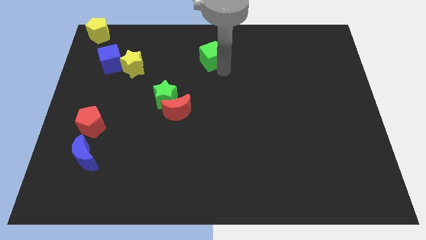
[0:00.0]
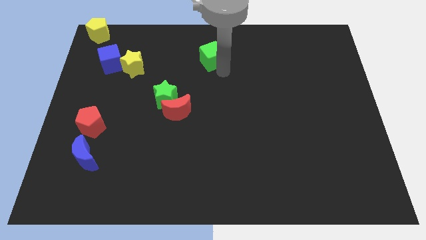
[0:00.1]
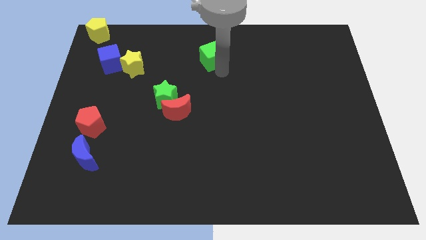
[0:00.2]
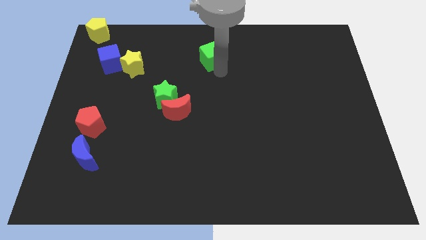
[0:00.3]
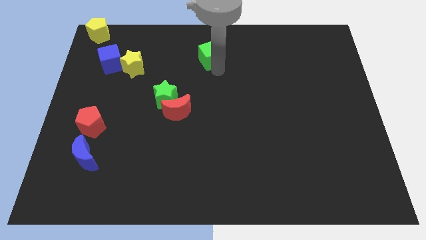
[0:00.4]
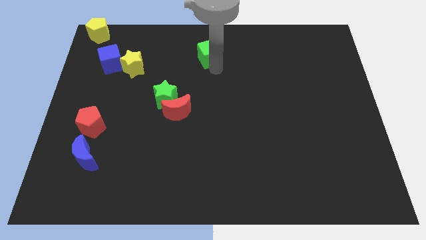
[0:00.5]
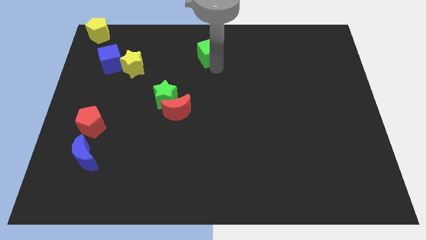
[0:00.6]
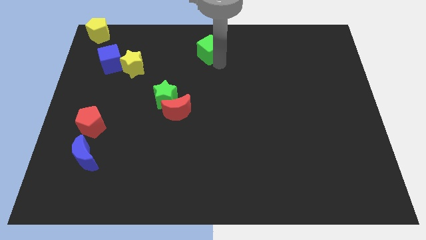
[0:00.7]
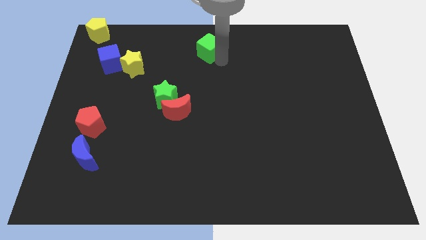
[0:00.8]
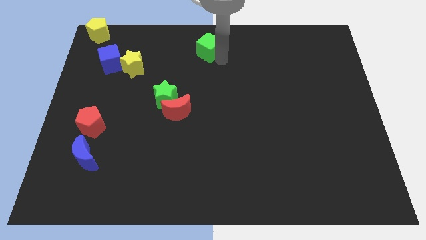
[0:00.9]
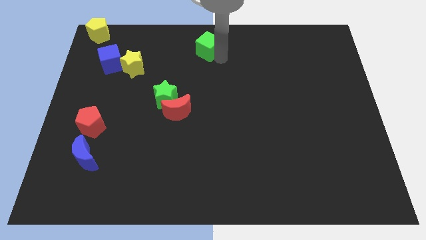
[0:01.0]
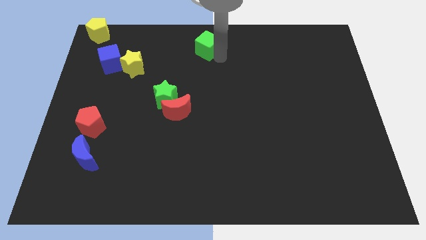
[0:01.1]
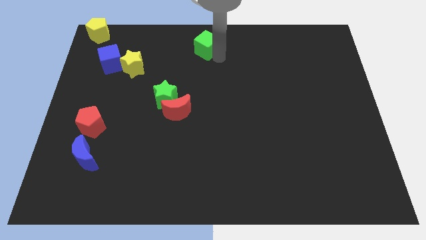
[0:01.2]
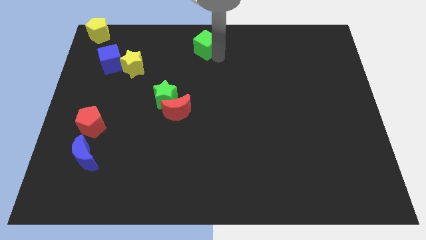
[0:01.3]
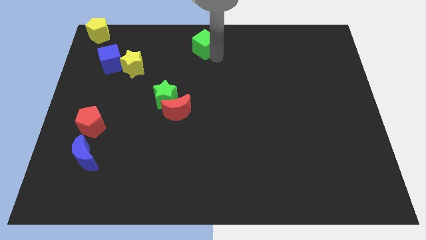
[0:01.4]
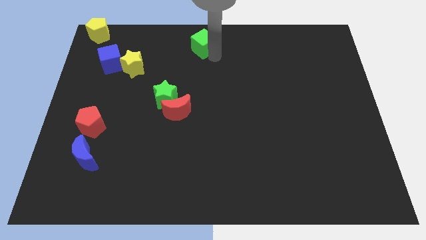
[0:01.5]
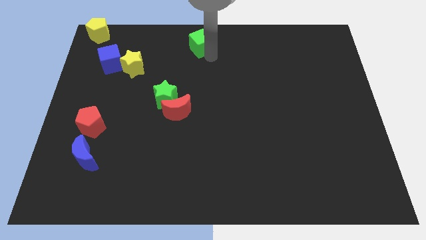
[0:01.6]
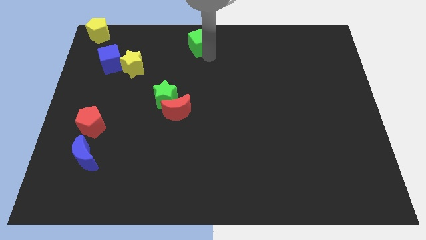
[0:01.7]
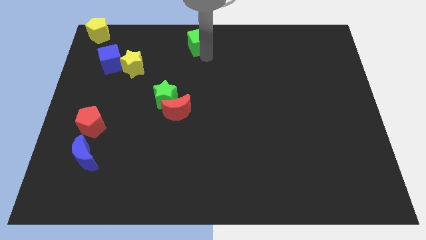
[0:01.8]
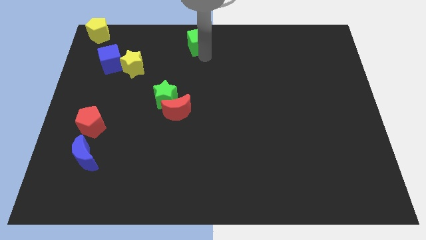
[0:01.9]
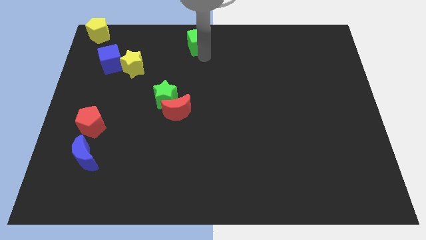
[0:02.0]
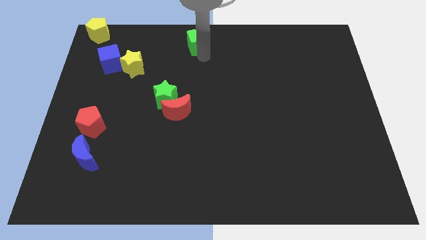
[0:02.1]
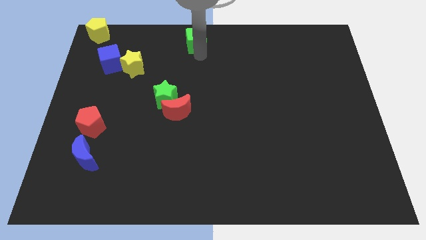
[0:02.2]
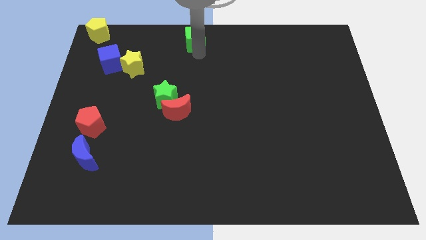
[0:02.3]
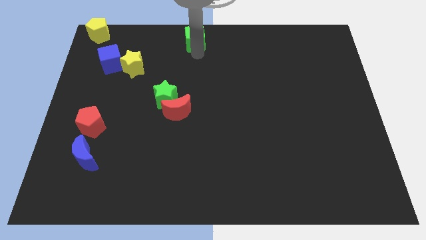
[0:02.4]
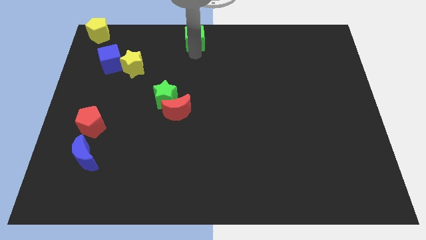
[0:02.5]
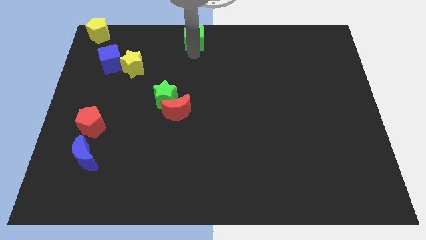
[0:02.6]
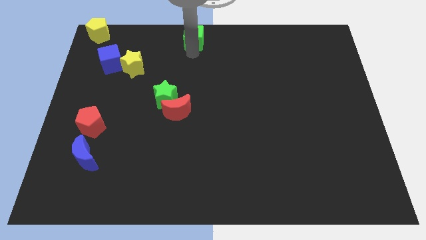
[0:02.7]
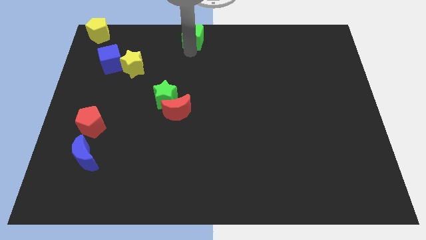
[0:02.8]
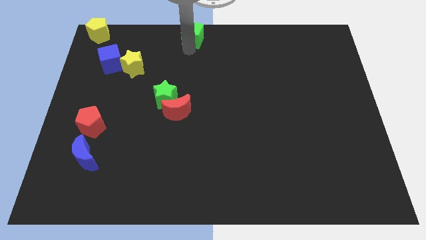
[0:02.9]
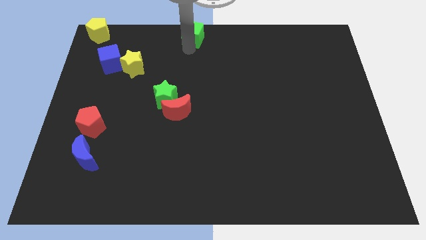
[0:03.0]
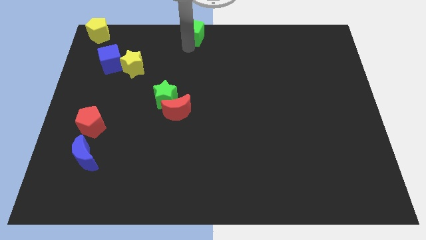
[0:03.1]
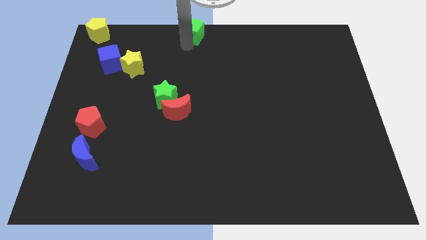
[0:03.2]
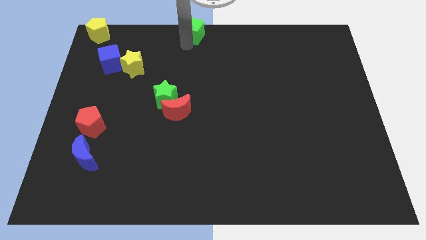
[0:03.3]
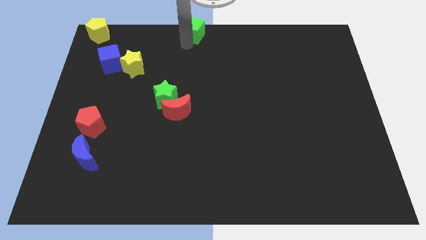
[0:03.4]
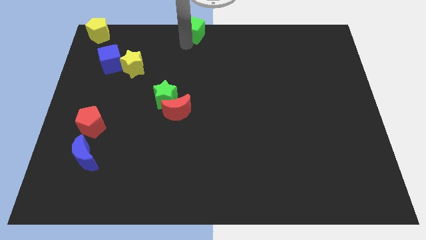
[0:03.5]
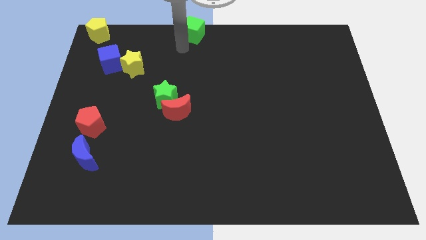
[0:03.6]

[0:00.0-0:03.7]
move the green cube to the top center

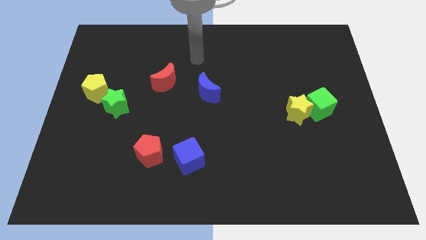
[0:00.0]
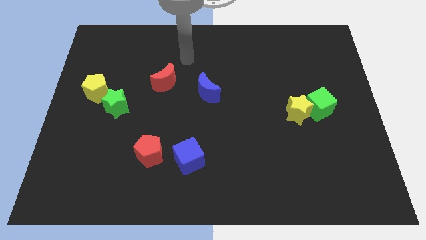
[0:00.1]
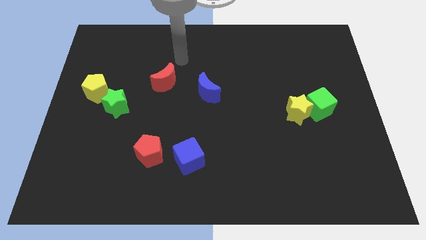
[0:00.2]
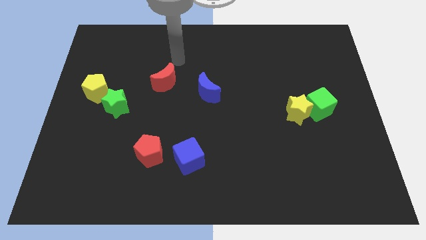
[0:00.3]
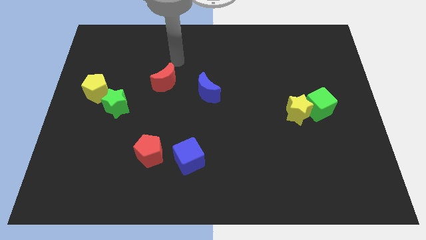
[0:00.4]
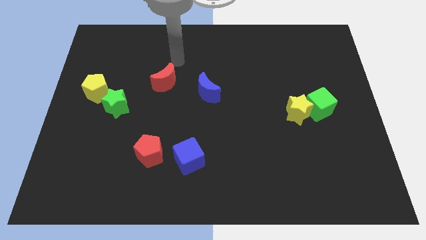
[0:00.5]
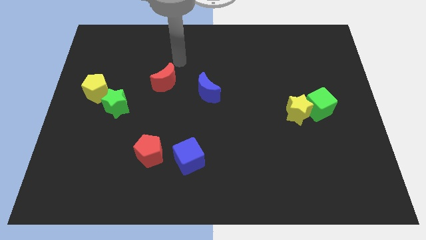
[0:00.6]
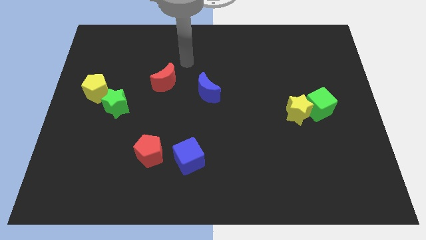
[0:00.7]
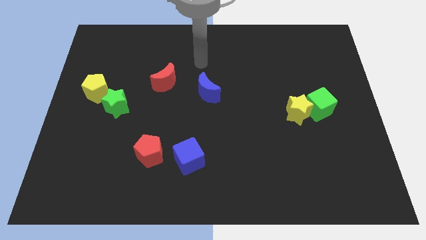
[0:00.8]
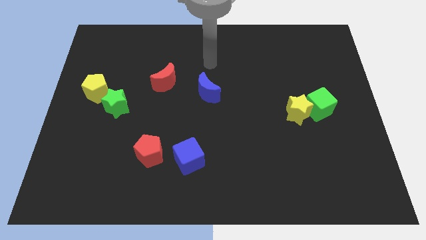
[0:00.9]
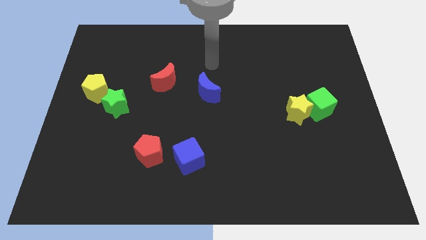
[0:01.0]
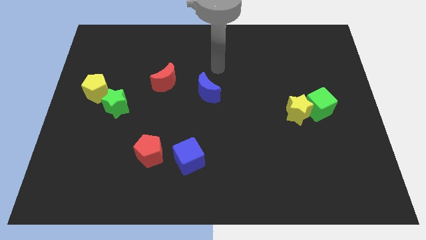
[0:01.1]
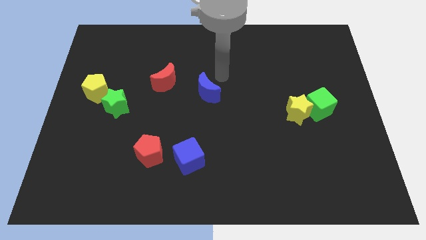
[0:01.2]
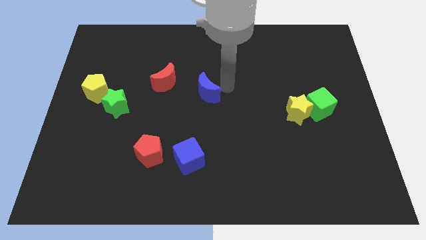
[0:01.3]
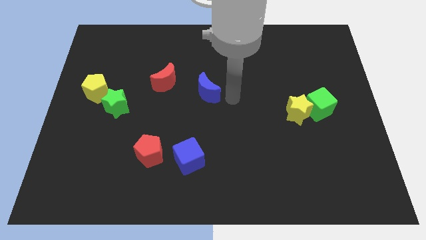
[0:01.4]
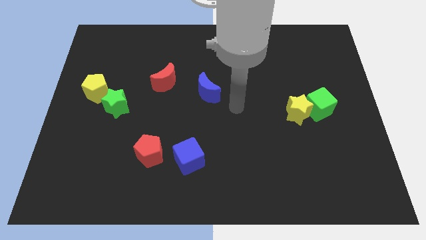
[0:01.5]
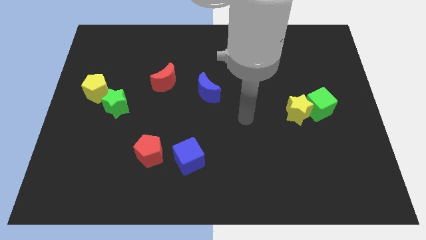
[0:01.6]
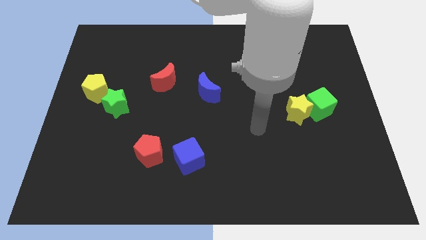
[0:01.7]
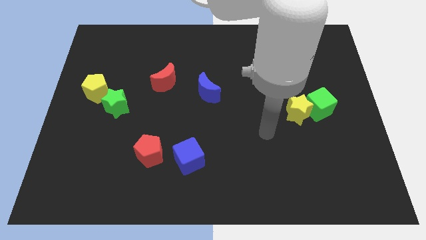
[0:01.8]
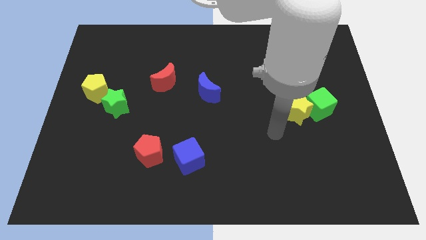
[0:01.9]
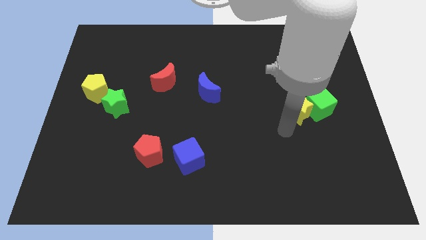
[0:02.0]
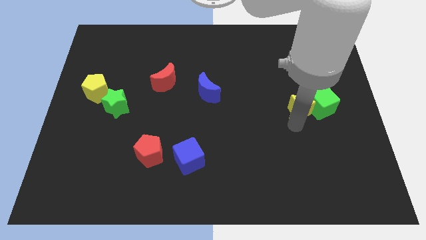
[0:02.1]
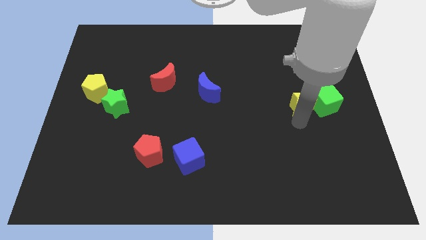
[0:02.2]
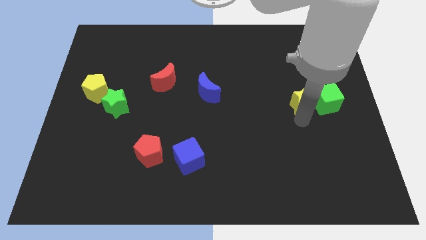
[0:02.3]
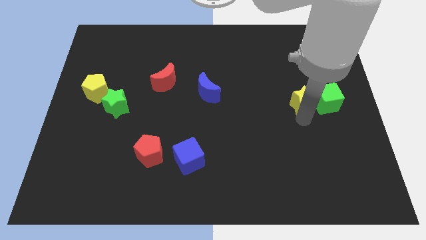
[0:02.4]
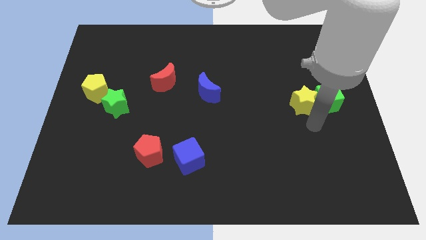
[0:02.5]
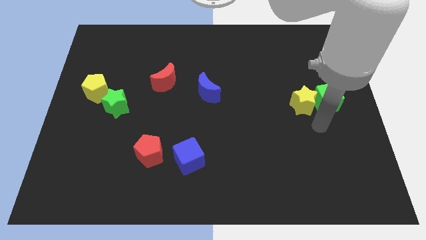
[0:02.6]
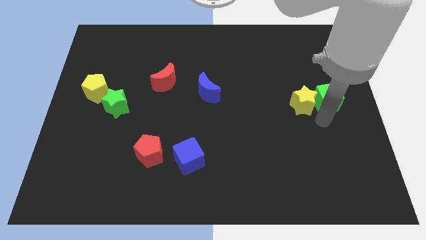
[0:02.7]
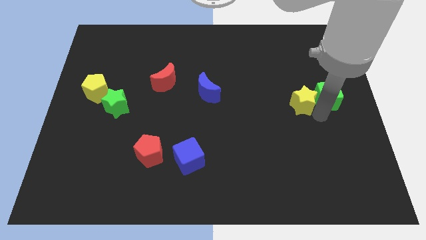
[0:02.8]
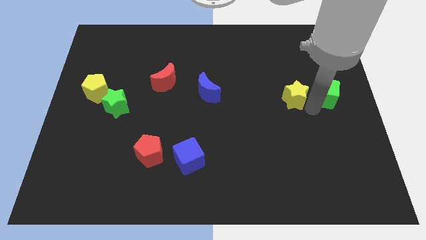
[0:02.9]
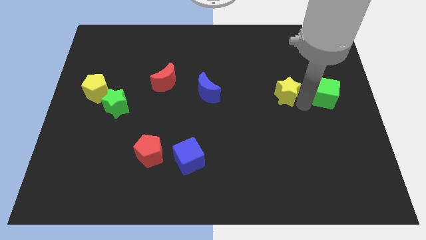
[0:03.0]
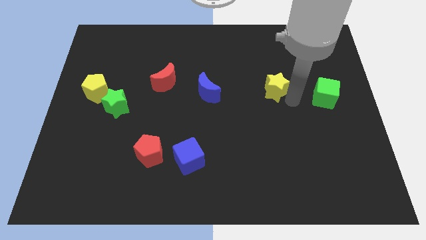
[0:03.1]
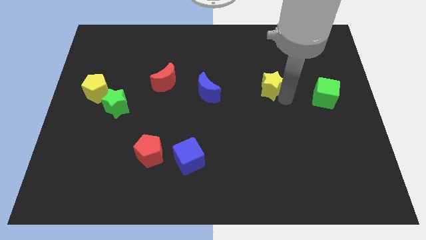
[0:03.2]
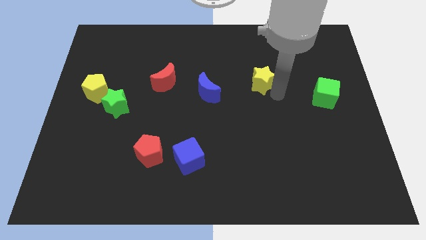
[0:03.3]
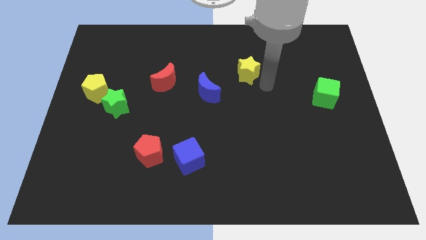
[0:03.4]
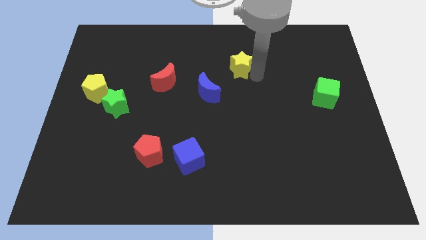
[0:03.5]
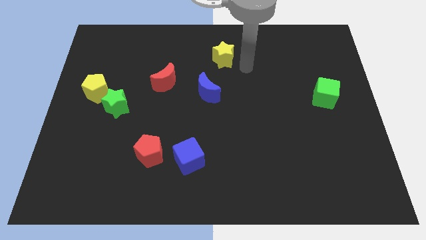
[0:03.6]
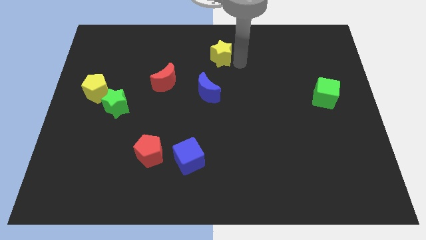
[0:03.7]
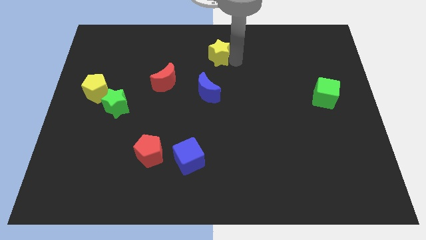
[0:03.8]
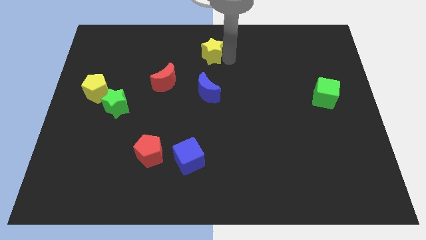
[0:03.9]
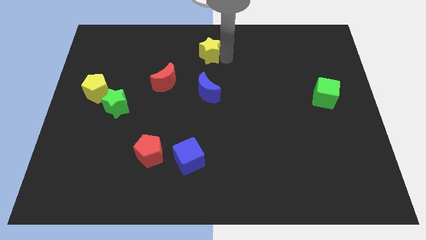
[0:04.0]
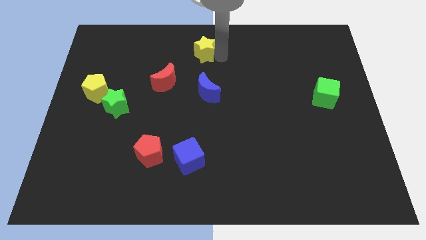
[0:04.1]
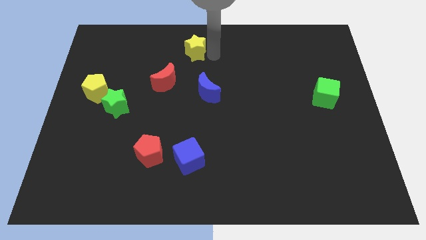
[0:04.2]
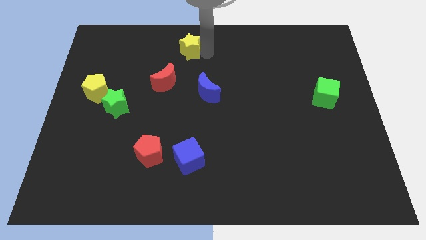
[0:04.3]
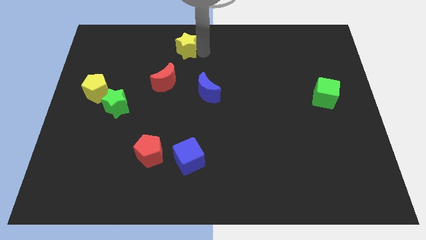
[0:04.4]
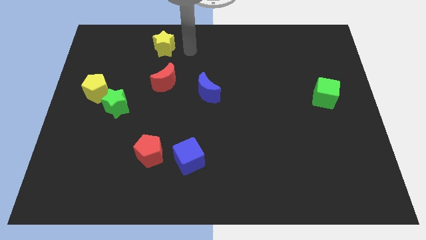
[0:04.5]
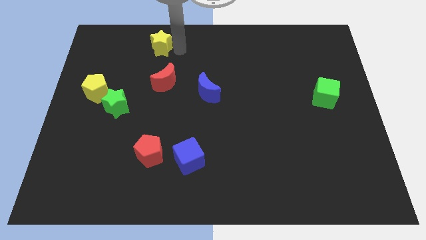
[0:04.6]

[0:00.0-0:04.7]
place the yellow star above the red crescent

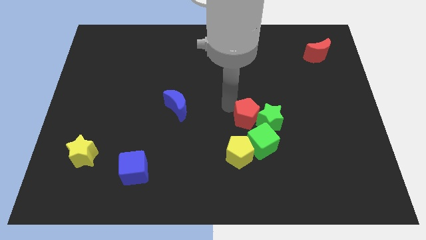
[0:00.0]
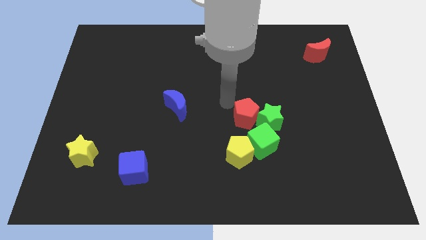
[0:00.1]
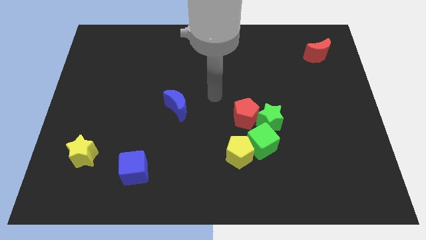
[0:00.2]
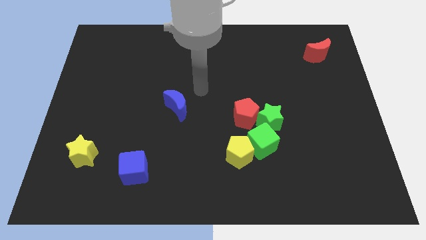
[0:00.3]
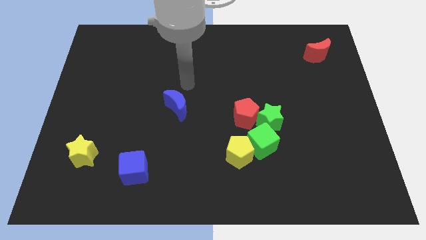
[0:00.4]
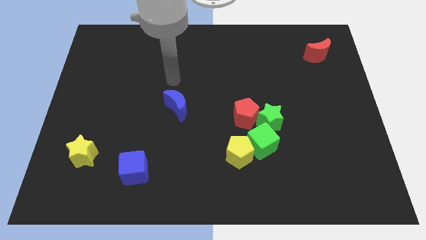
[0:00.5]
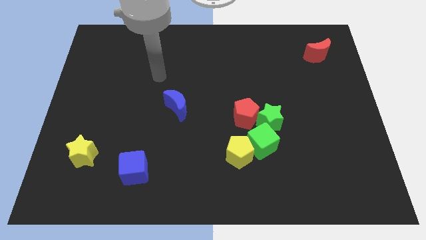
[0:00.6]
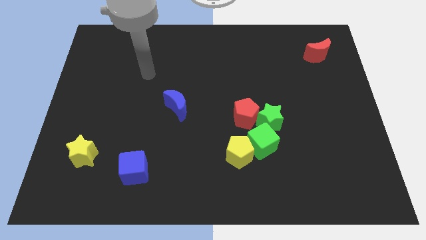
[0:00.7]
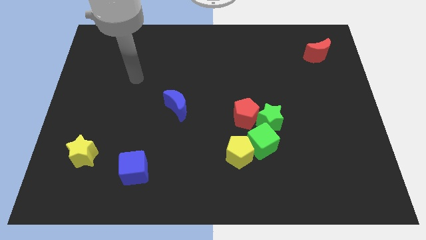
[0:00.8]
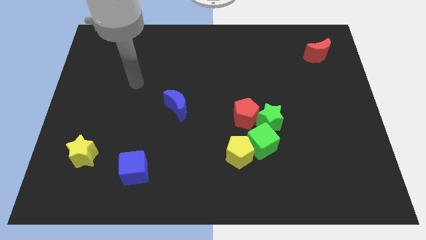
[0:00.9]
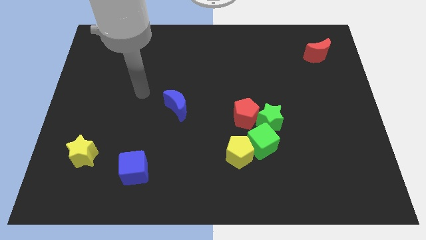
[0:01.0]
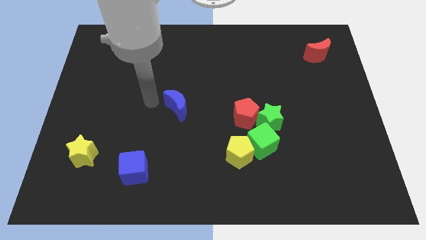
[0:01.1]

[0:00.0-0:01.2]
point your arm at the top left side of the blue moon
